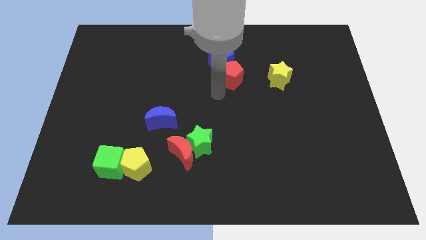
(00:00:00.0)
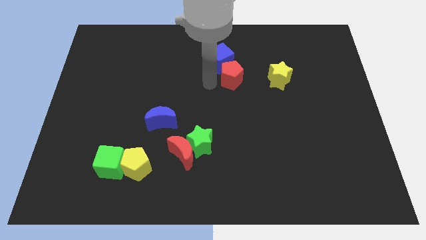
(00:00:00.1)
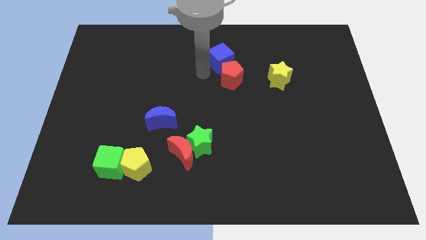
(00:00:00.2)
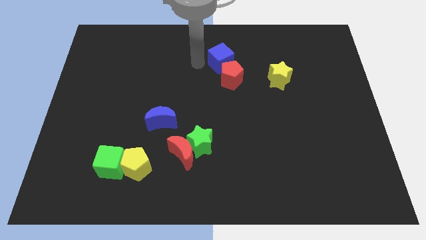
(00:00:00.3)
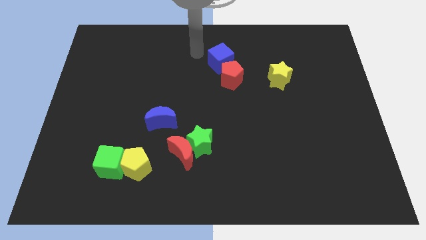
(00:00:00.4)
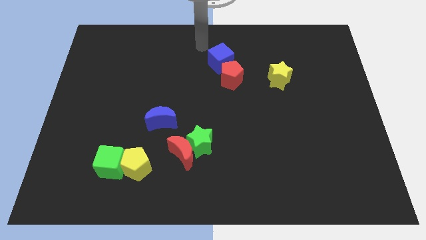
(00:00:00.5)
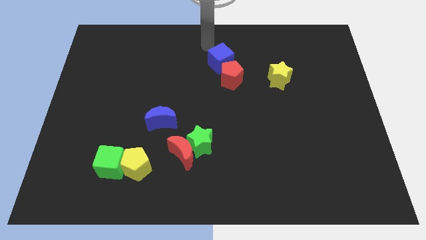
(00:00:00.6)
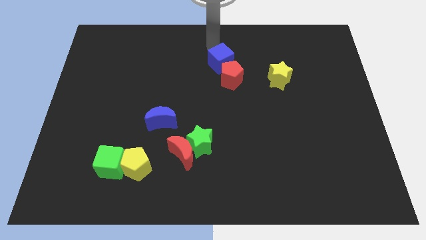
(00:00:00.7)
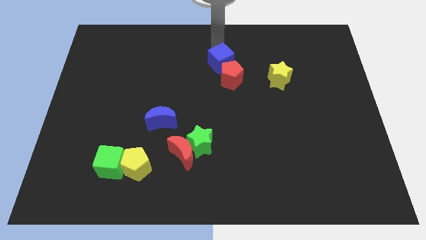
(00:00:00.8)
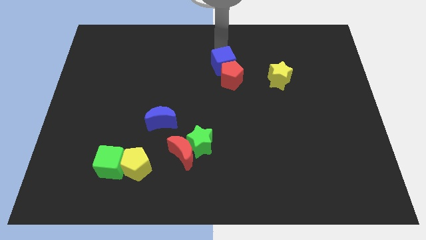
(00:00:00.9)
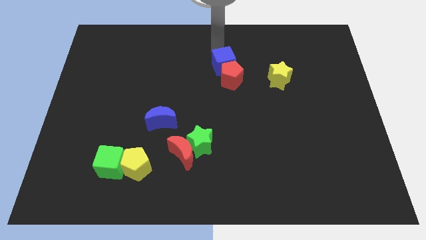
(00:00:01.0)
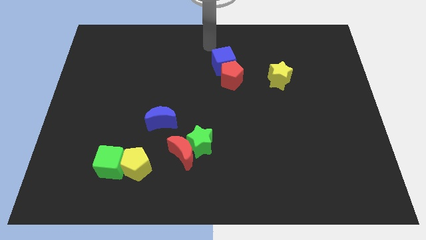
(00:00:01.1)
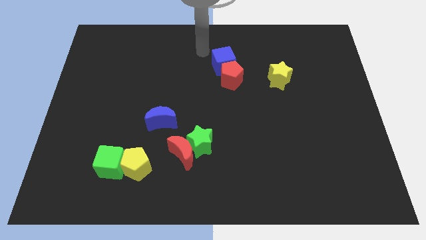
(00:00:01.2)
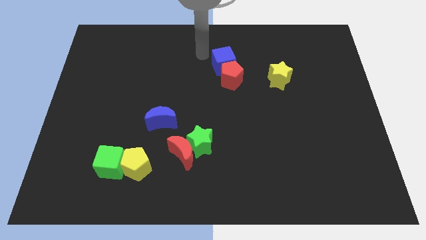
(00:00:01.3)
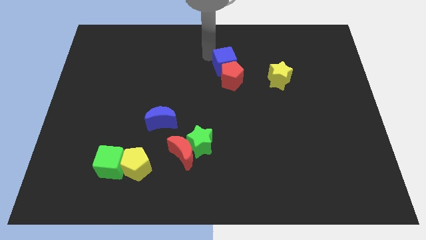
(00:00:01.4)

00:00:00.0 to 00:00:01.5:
push the blue cube into the red pentagon

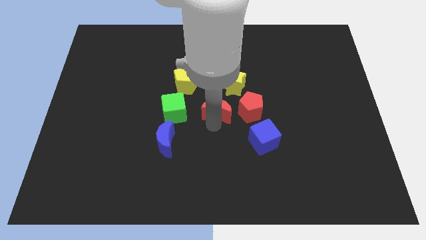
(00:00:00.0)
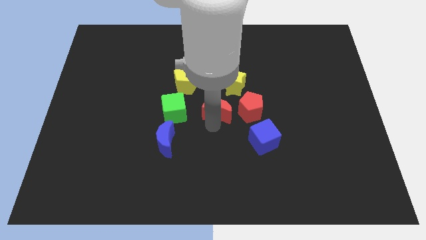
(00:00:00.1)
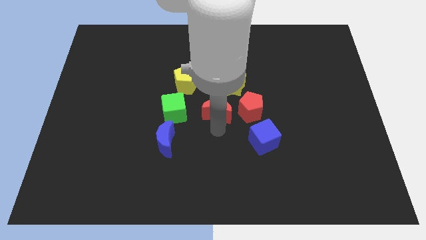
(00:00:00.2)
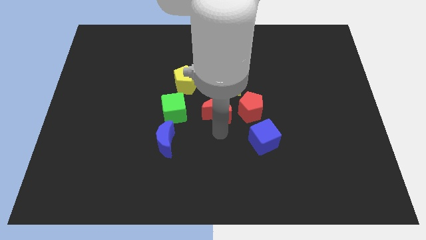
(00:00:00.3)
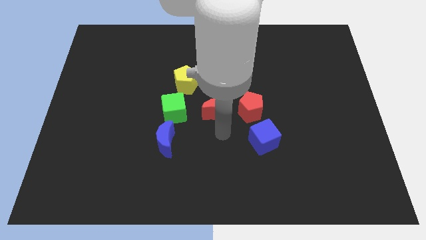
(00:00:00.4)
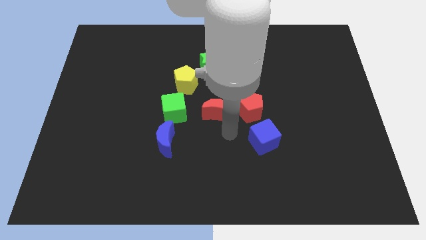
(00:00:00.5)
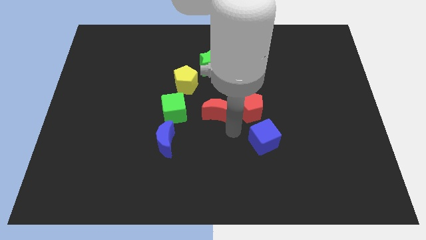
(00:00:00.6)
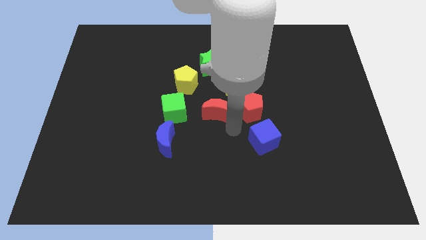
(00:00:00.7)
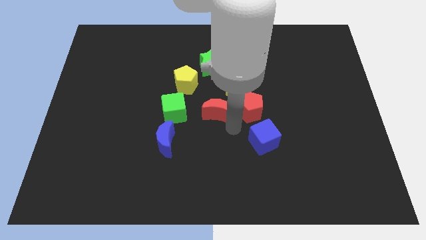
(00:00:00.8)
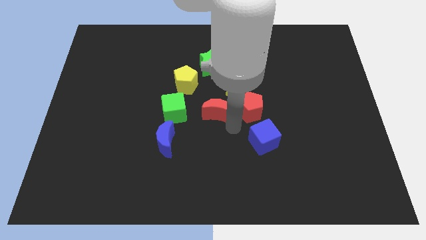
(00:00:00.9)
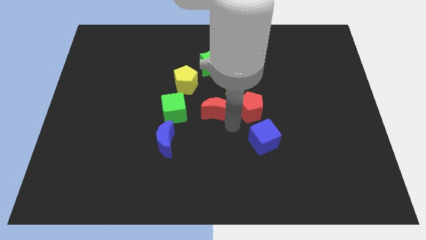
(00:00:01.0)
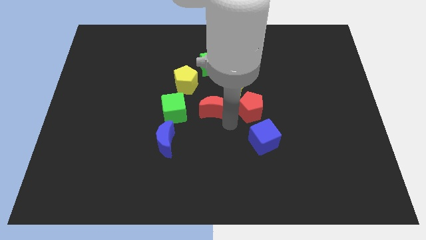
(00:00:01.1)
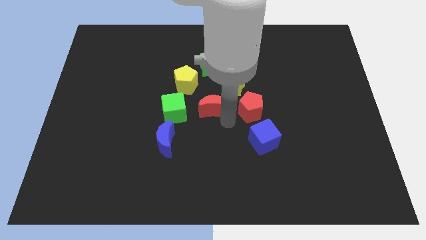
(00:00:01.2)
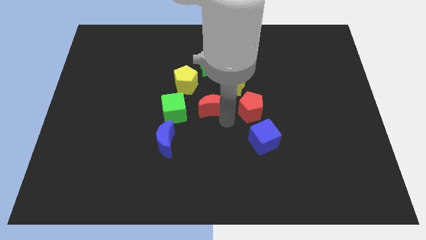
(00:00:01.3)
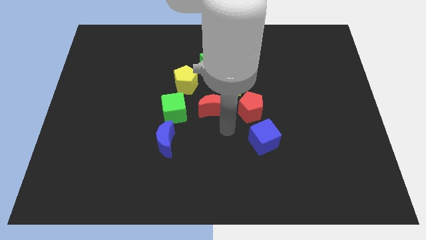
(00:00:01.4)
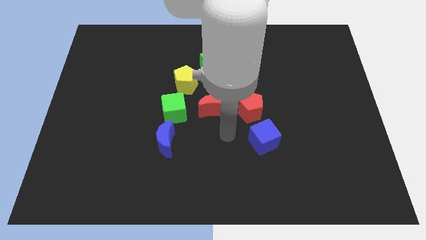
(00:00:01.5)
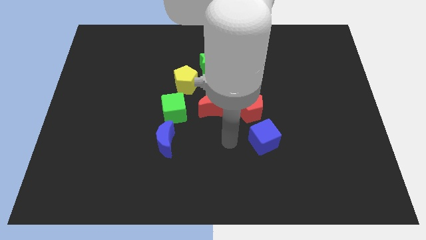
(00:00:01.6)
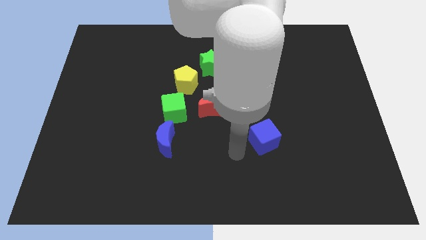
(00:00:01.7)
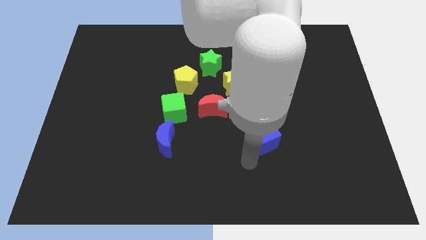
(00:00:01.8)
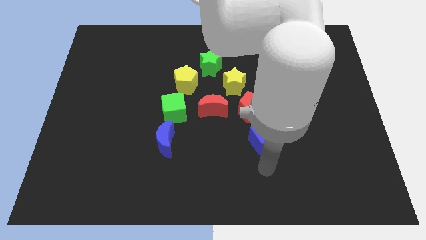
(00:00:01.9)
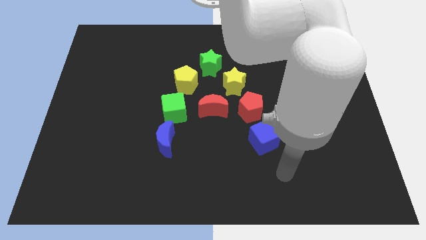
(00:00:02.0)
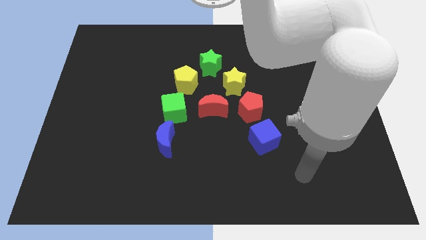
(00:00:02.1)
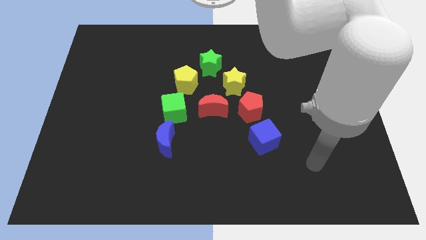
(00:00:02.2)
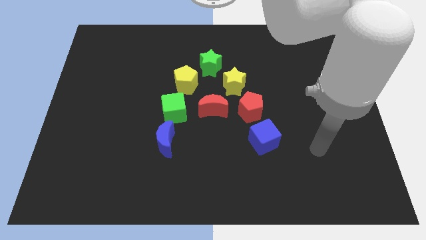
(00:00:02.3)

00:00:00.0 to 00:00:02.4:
adjust the red moon in between the green cube and red pentagon

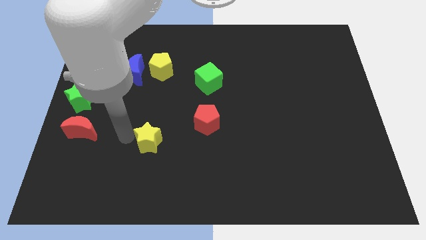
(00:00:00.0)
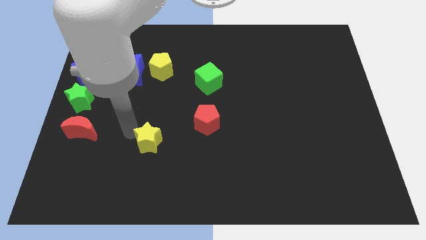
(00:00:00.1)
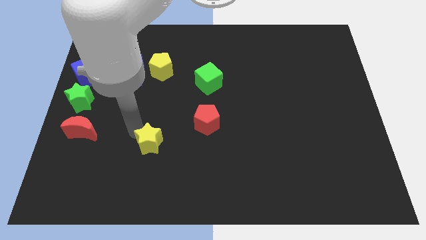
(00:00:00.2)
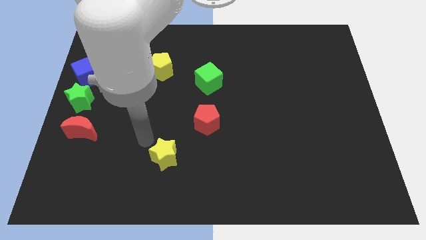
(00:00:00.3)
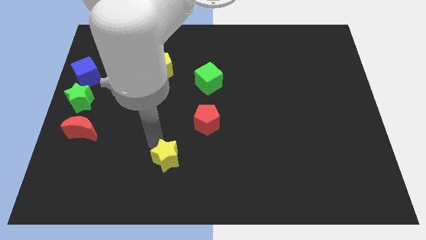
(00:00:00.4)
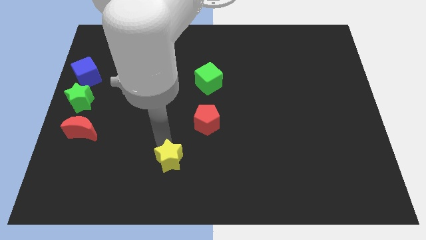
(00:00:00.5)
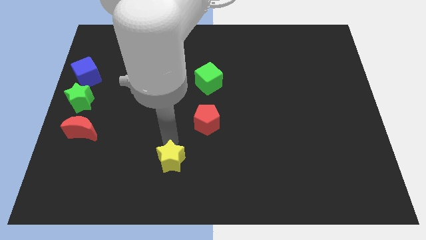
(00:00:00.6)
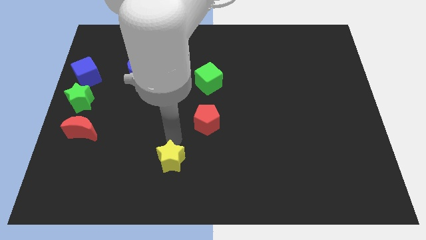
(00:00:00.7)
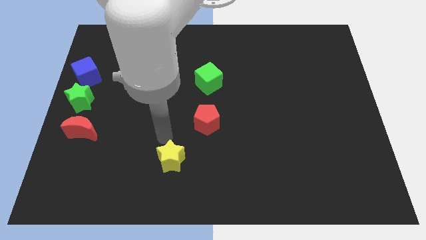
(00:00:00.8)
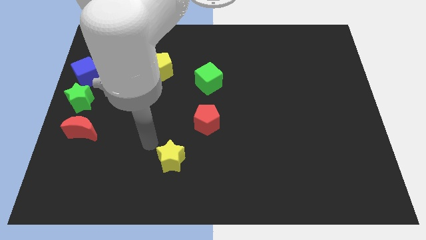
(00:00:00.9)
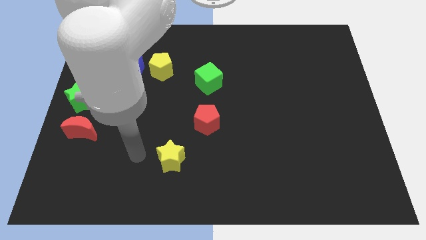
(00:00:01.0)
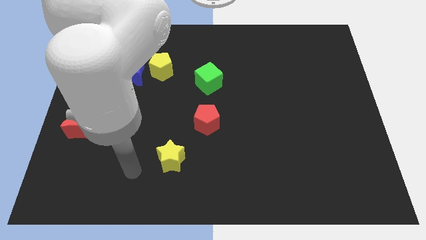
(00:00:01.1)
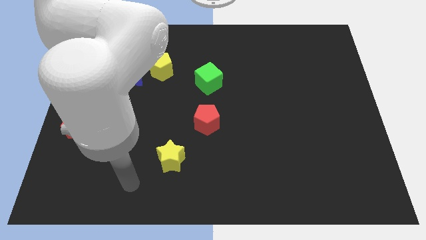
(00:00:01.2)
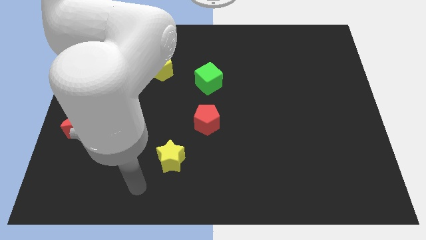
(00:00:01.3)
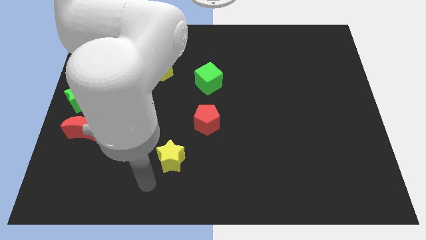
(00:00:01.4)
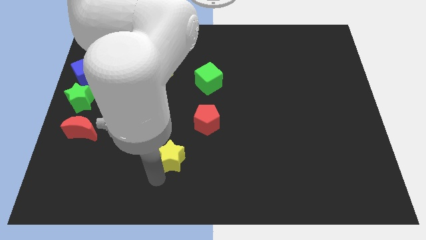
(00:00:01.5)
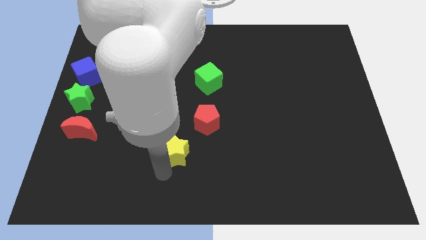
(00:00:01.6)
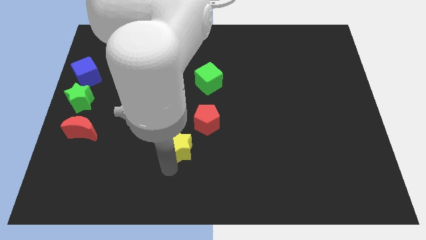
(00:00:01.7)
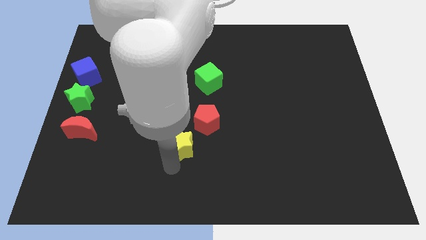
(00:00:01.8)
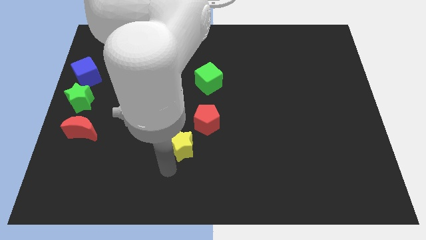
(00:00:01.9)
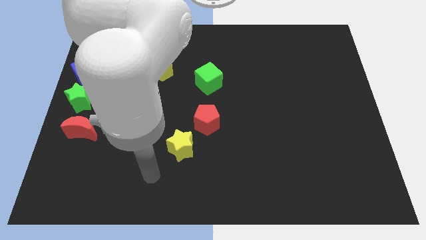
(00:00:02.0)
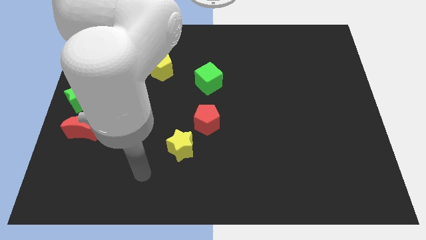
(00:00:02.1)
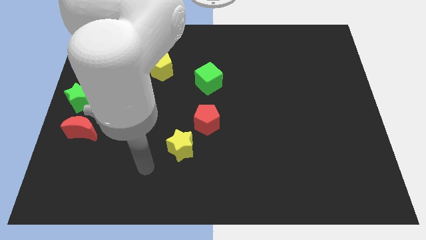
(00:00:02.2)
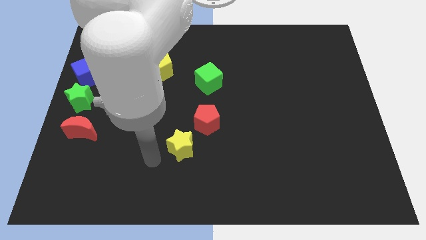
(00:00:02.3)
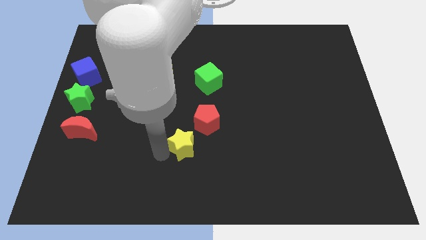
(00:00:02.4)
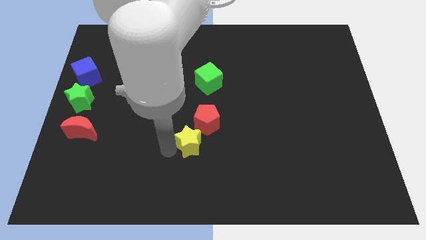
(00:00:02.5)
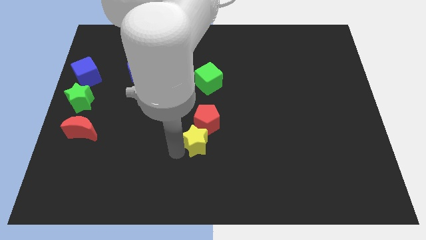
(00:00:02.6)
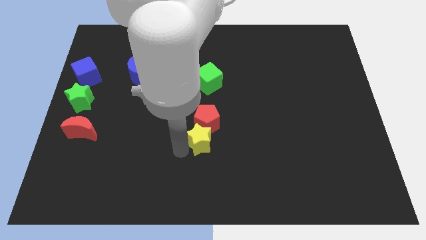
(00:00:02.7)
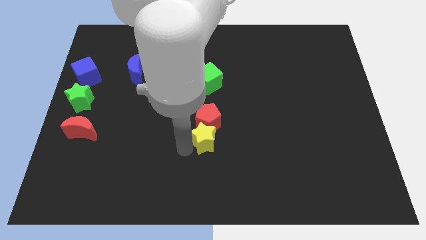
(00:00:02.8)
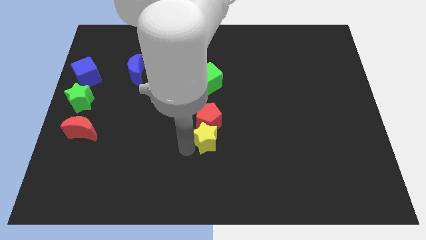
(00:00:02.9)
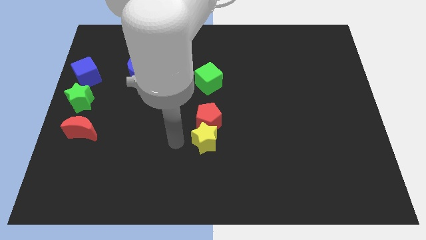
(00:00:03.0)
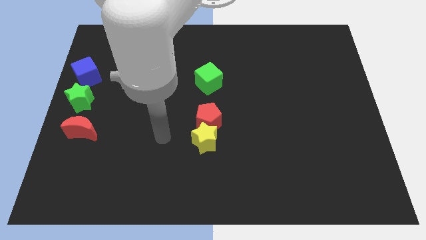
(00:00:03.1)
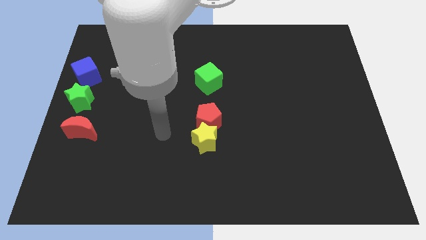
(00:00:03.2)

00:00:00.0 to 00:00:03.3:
push the yellow star into bottom of red pentagon

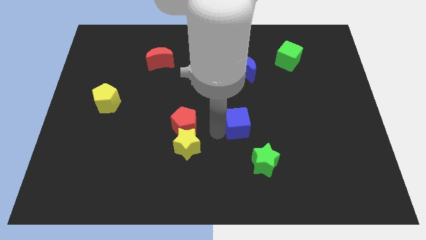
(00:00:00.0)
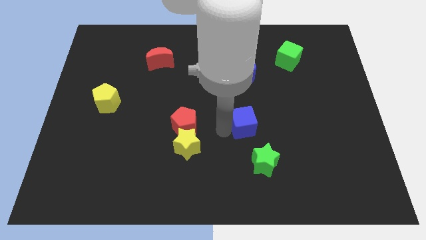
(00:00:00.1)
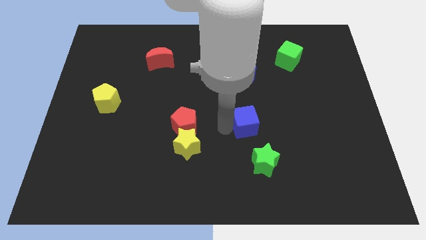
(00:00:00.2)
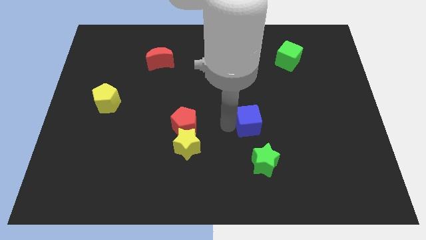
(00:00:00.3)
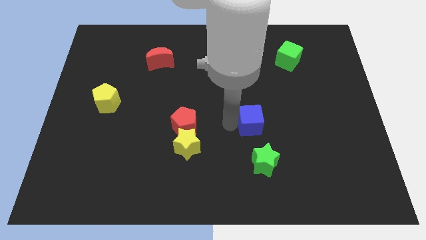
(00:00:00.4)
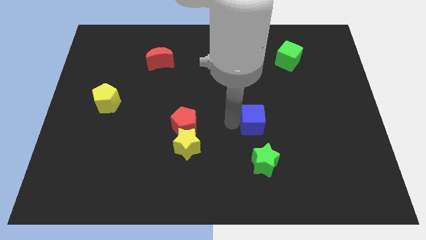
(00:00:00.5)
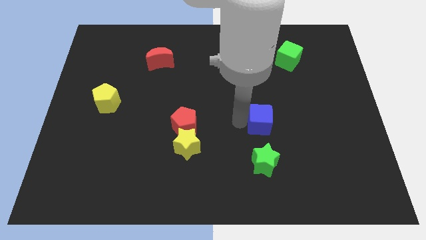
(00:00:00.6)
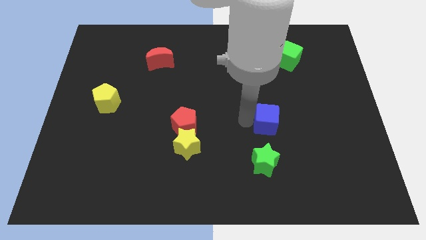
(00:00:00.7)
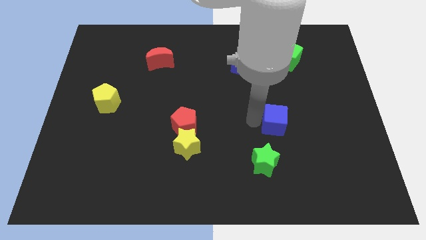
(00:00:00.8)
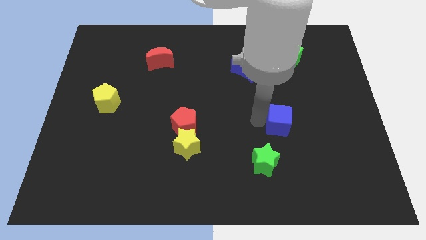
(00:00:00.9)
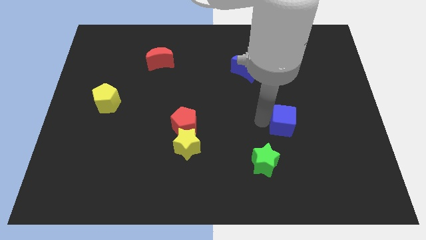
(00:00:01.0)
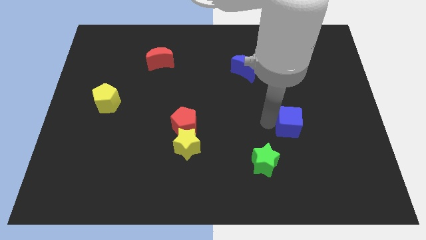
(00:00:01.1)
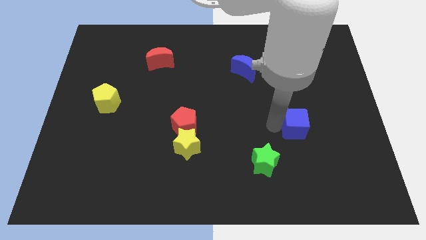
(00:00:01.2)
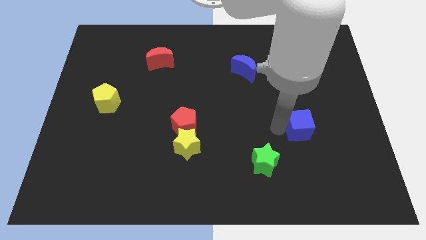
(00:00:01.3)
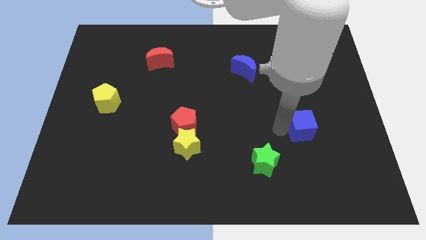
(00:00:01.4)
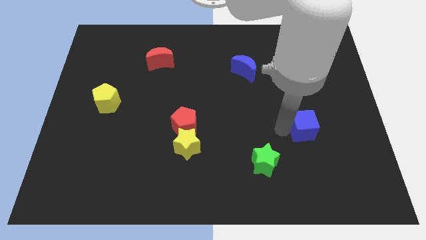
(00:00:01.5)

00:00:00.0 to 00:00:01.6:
move the blue cube to right side of the board
